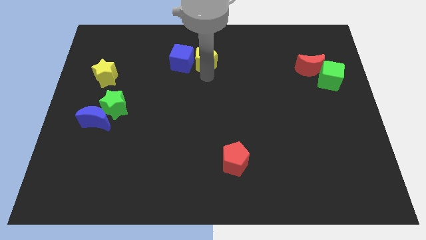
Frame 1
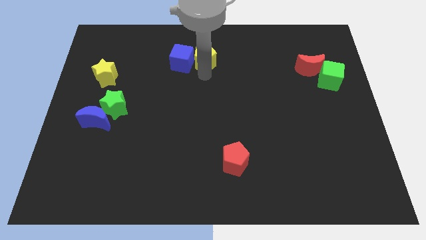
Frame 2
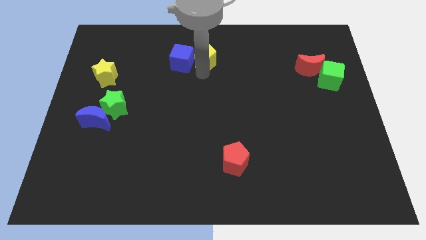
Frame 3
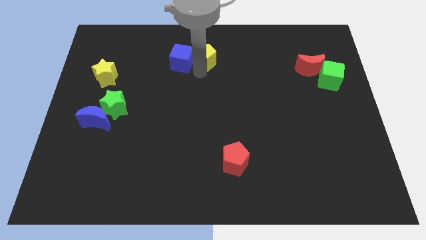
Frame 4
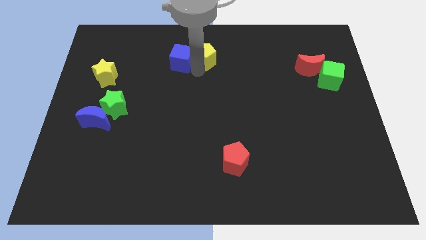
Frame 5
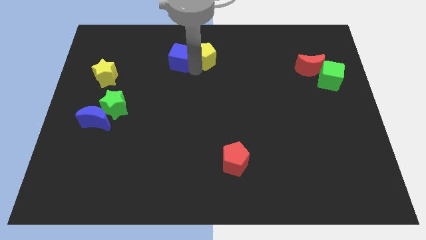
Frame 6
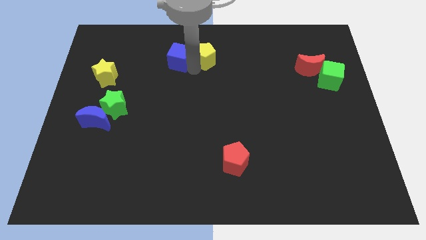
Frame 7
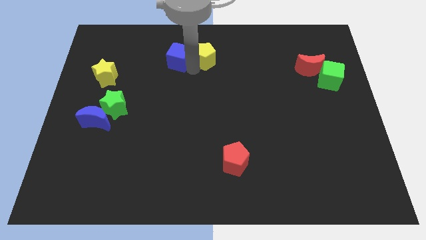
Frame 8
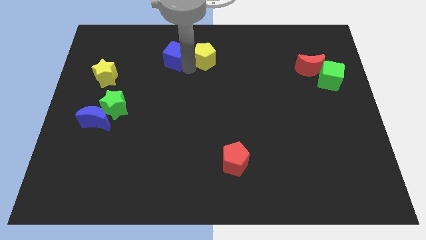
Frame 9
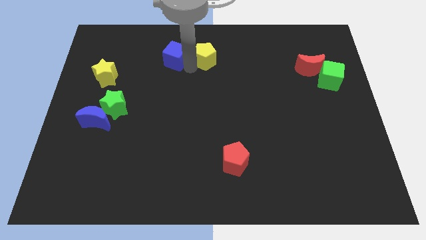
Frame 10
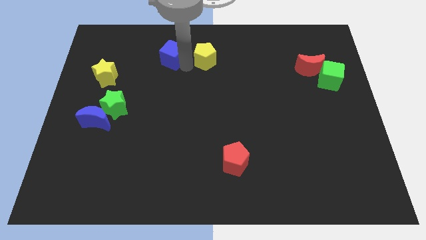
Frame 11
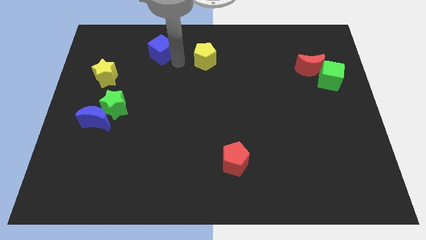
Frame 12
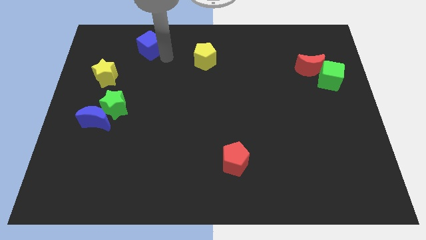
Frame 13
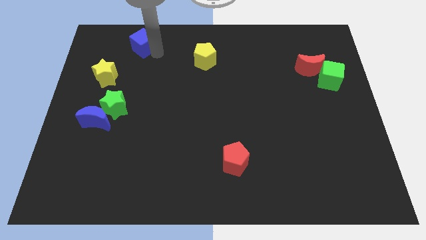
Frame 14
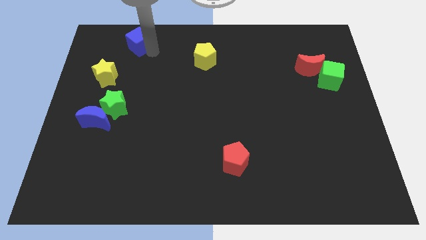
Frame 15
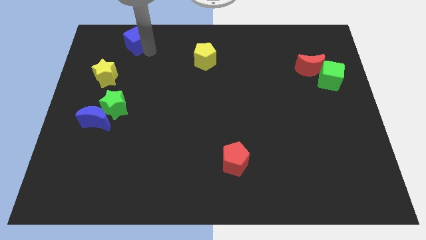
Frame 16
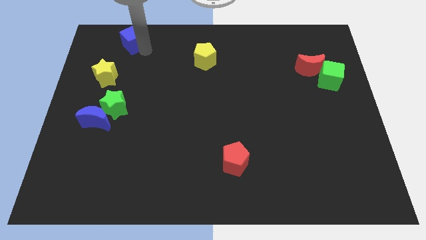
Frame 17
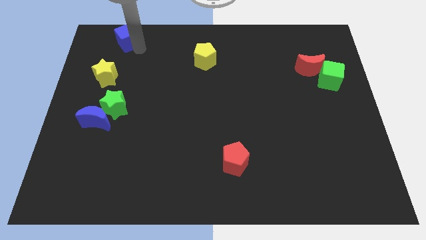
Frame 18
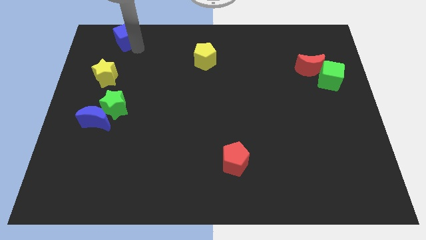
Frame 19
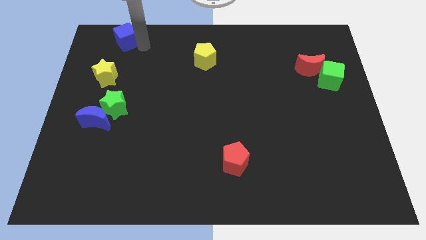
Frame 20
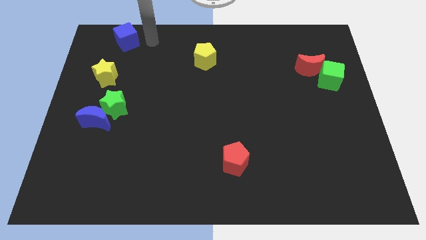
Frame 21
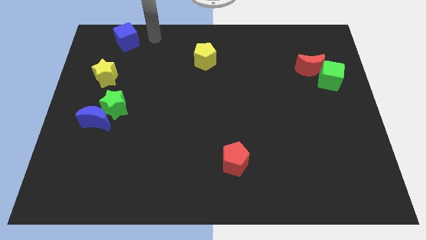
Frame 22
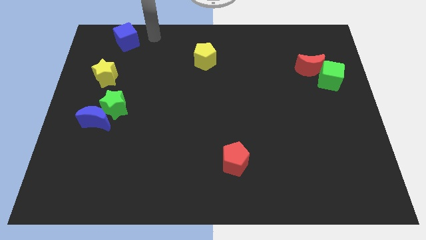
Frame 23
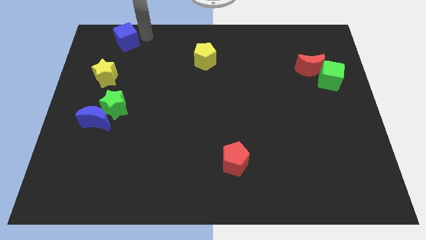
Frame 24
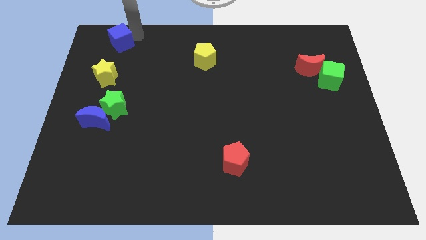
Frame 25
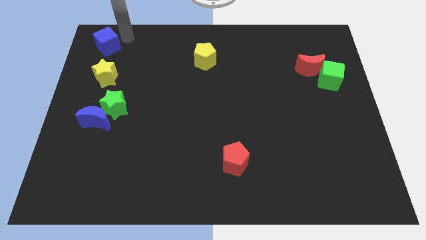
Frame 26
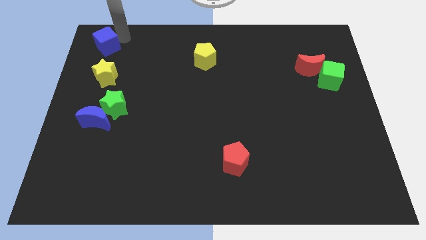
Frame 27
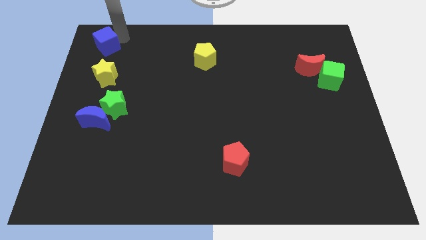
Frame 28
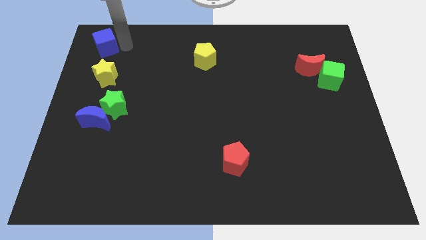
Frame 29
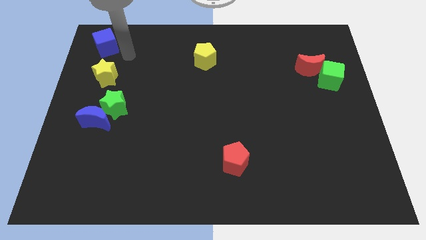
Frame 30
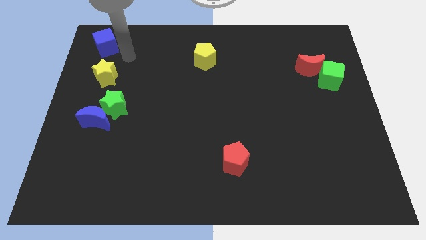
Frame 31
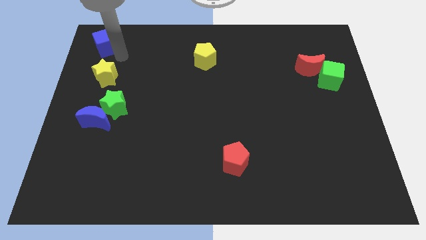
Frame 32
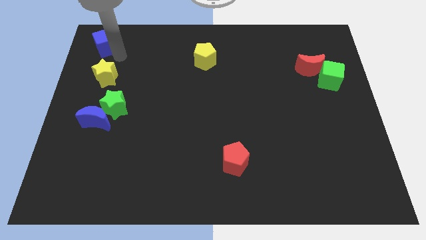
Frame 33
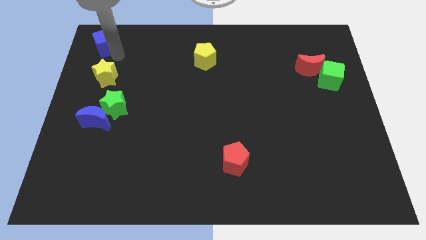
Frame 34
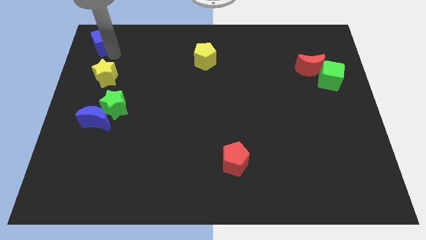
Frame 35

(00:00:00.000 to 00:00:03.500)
move the blue cube above yellow star

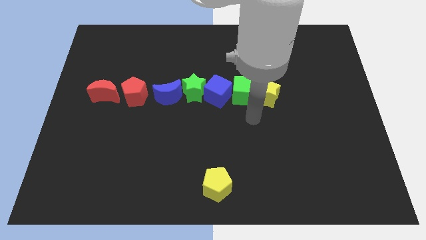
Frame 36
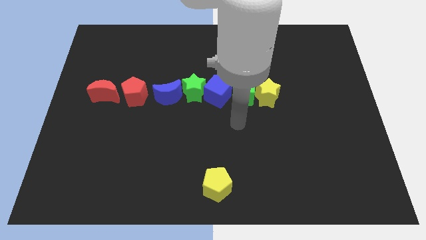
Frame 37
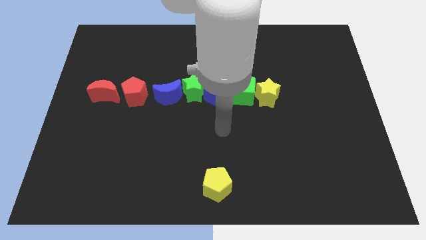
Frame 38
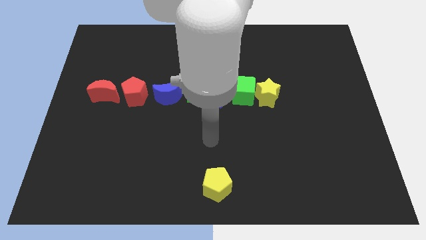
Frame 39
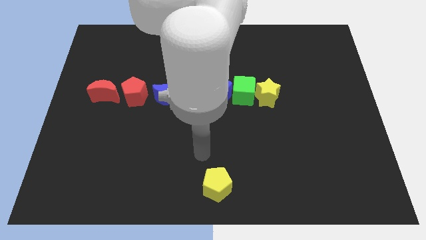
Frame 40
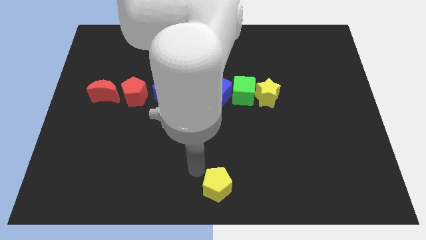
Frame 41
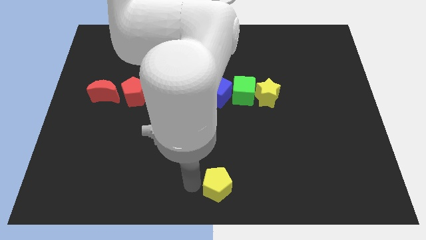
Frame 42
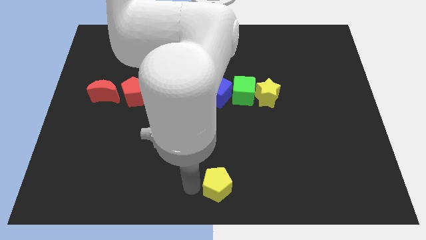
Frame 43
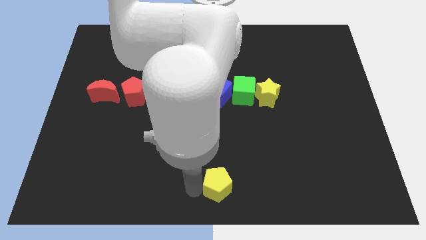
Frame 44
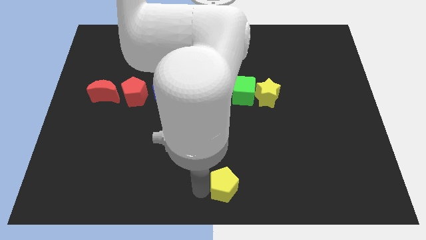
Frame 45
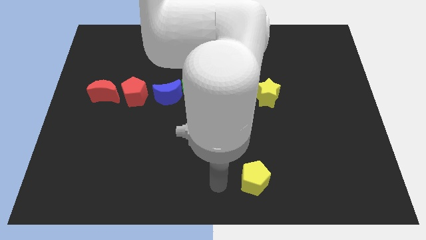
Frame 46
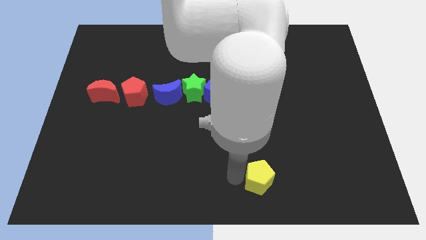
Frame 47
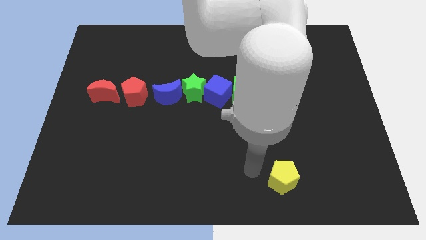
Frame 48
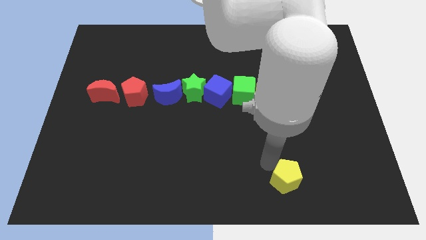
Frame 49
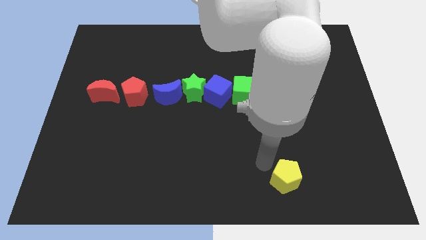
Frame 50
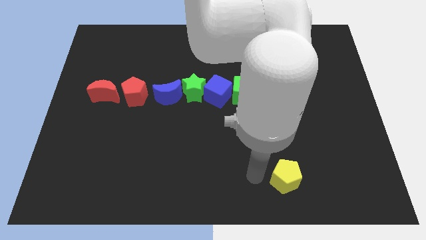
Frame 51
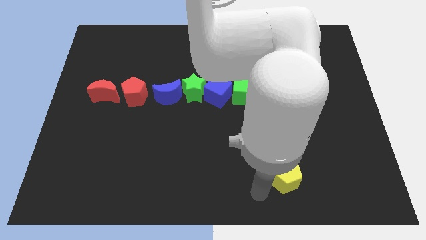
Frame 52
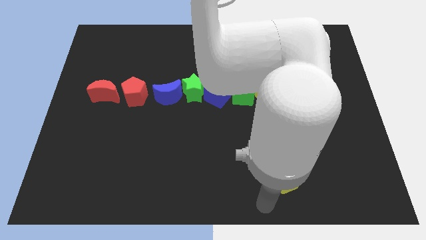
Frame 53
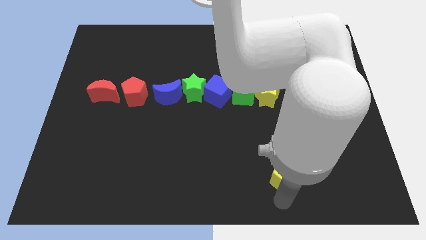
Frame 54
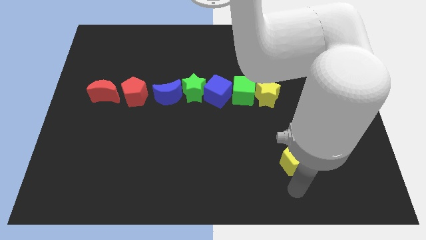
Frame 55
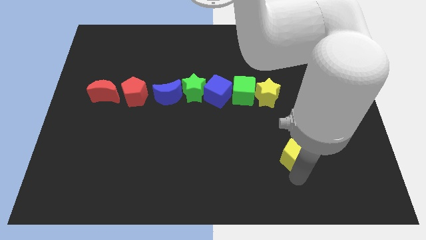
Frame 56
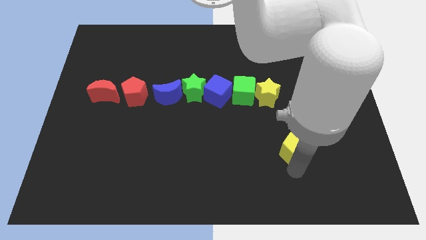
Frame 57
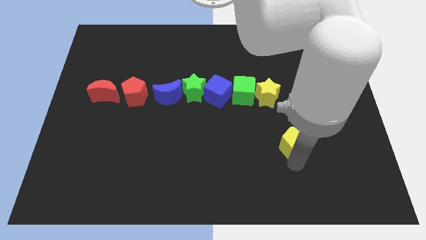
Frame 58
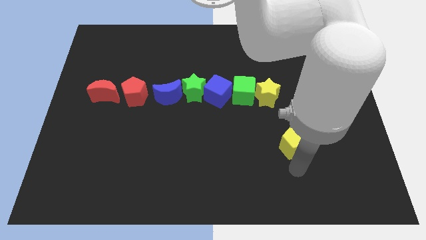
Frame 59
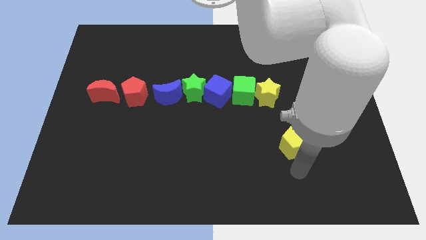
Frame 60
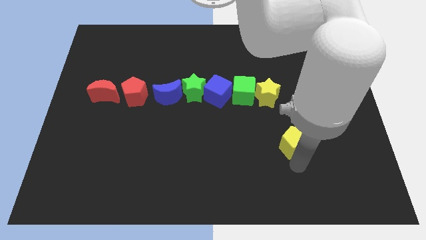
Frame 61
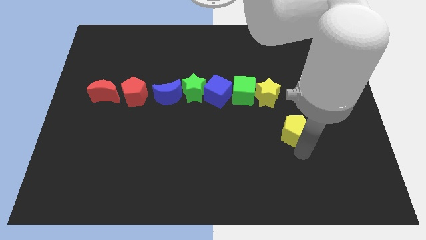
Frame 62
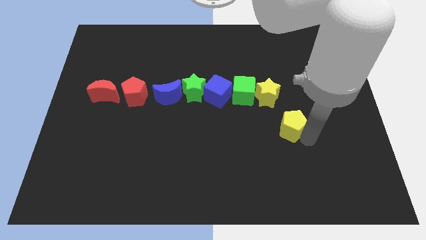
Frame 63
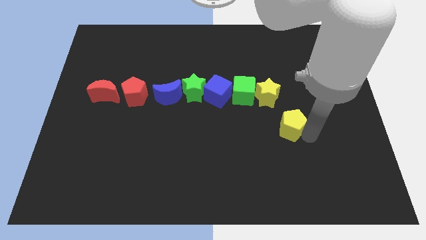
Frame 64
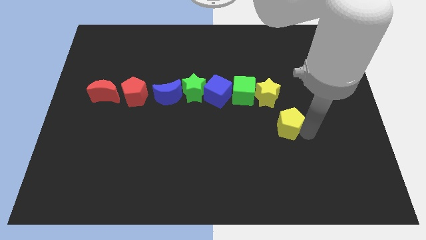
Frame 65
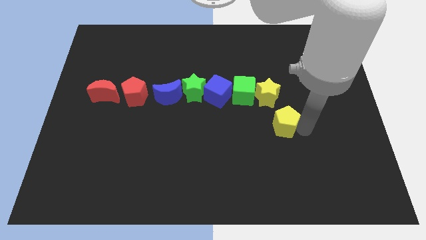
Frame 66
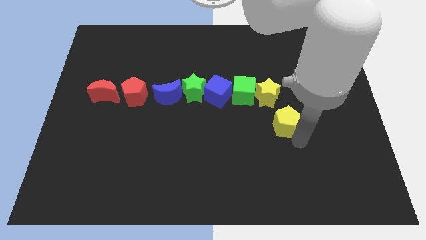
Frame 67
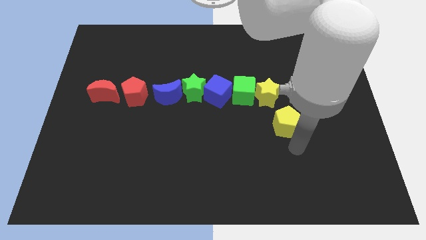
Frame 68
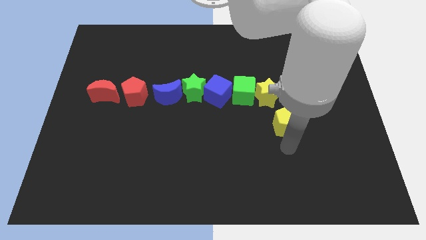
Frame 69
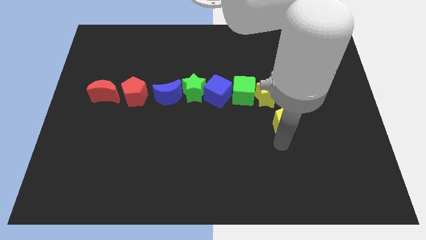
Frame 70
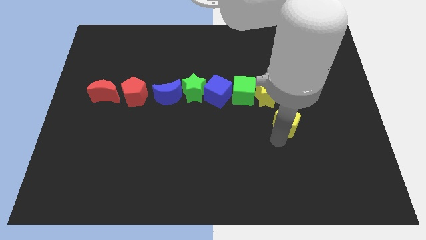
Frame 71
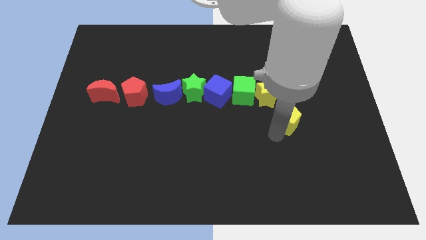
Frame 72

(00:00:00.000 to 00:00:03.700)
move yellow pentagon to the top of the board

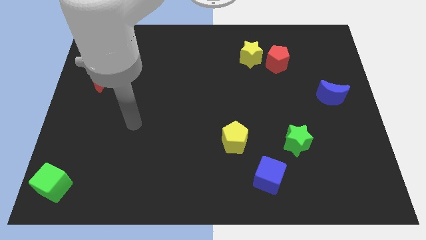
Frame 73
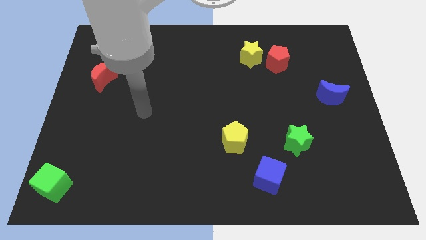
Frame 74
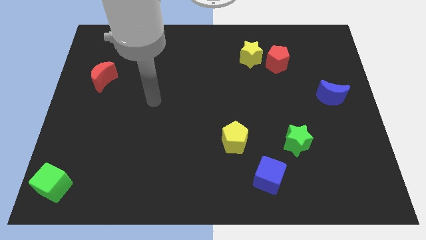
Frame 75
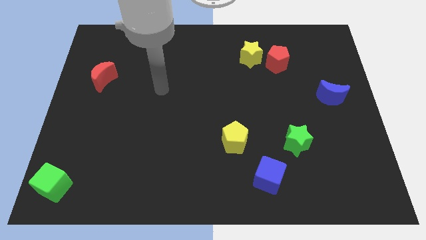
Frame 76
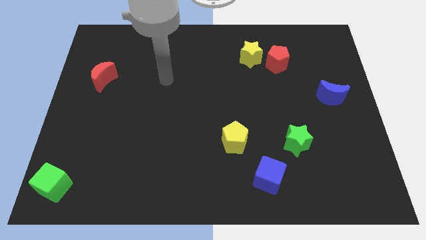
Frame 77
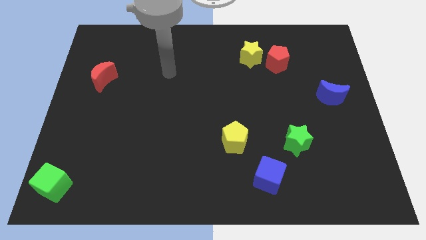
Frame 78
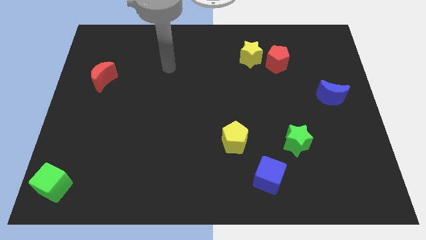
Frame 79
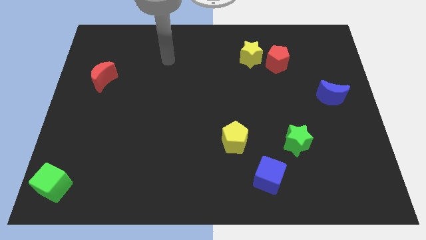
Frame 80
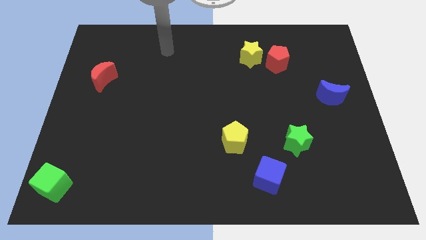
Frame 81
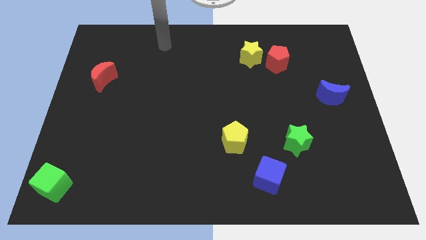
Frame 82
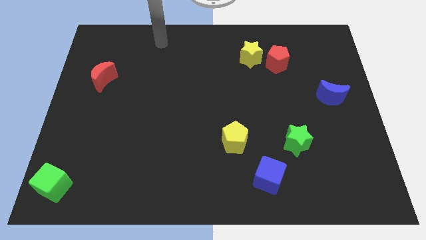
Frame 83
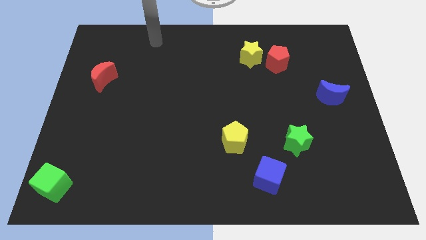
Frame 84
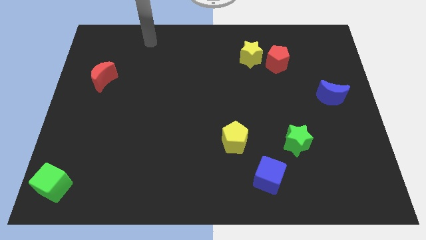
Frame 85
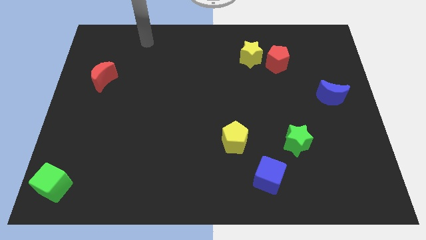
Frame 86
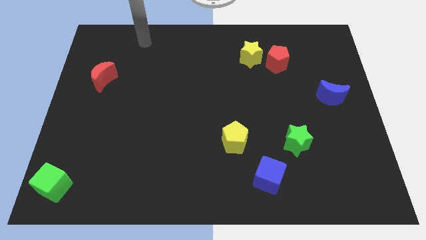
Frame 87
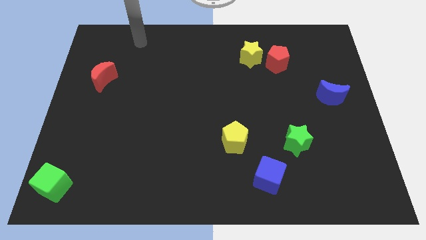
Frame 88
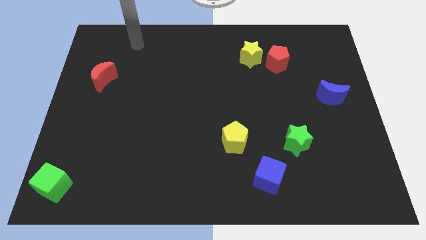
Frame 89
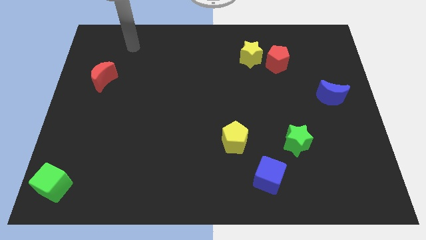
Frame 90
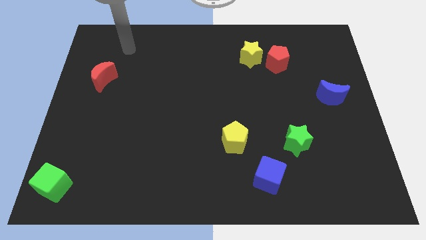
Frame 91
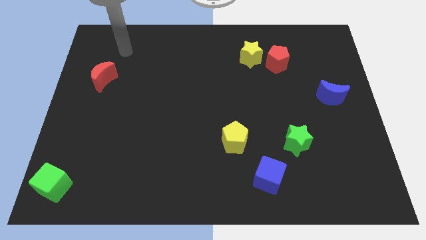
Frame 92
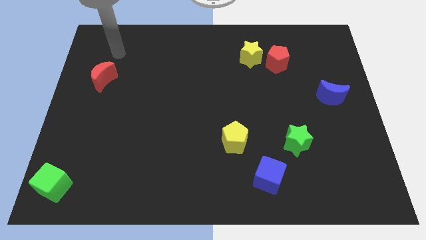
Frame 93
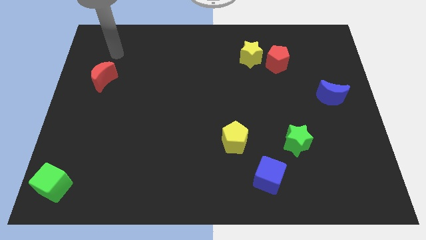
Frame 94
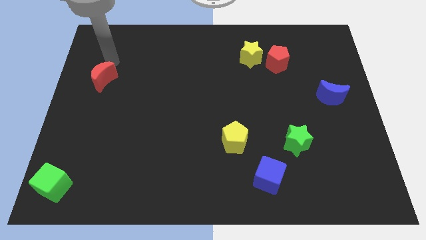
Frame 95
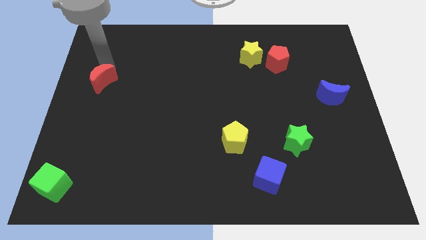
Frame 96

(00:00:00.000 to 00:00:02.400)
move your arm to the red moon
